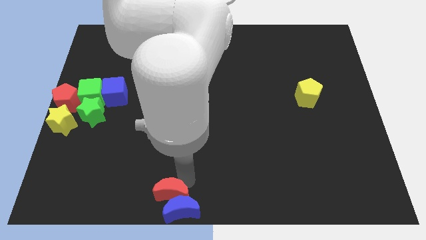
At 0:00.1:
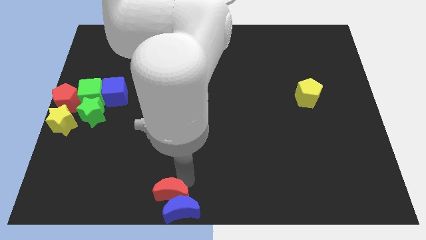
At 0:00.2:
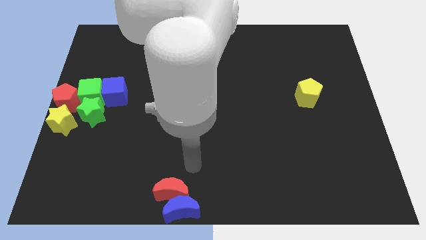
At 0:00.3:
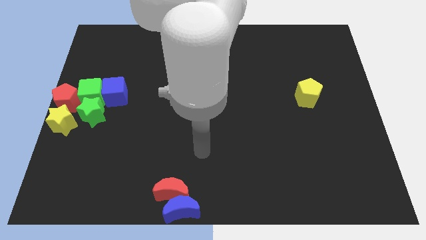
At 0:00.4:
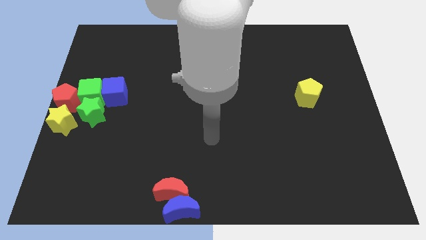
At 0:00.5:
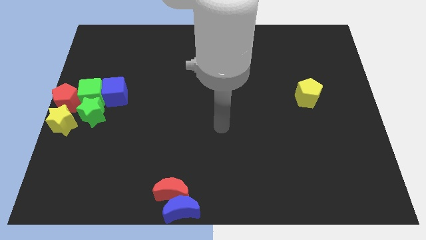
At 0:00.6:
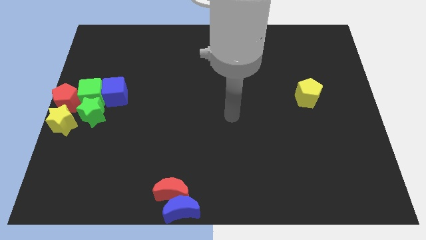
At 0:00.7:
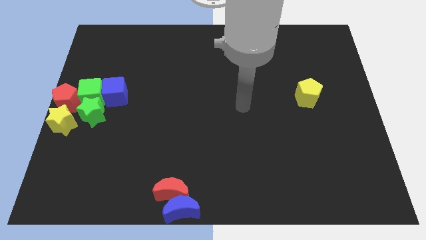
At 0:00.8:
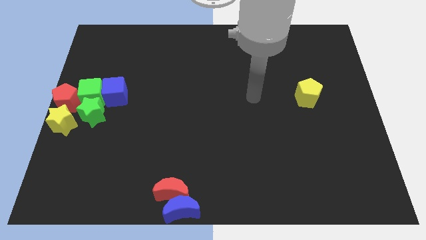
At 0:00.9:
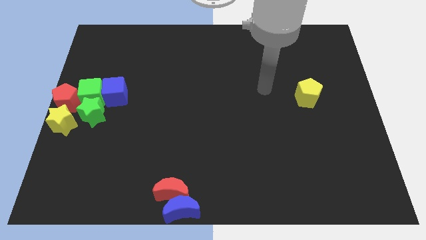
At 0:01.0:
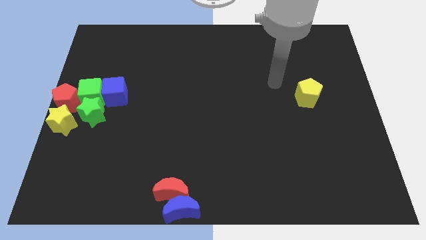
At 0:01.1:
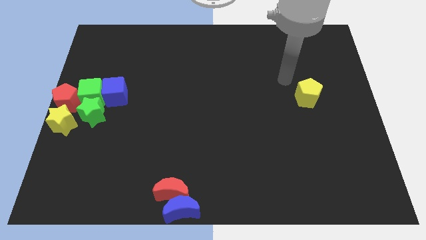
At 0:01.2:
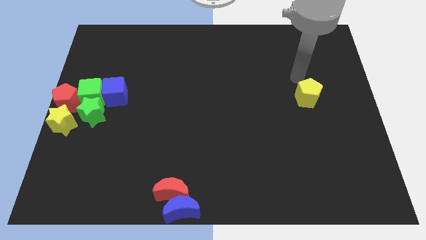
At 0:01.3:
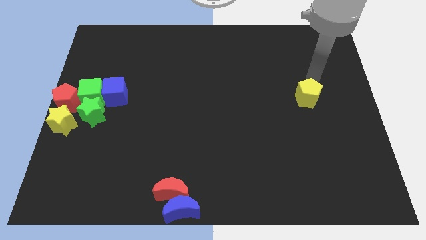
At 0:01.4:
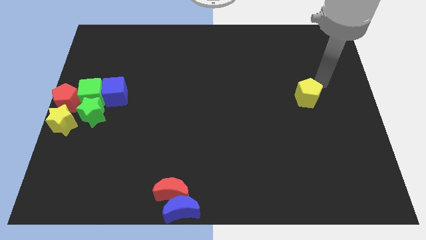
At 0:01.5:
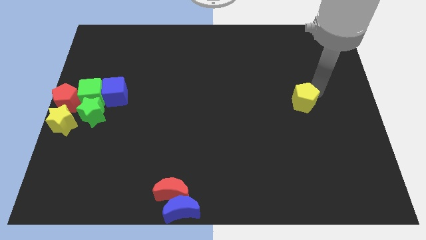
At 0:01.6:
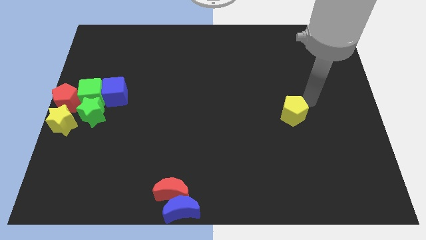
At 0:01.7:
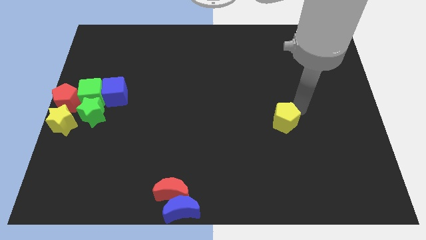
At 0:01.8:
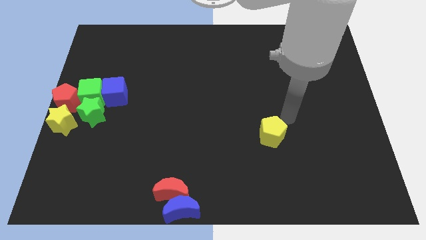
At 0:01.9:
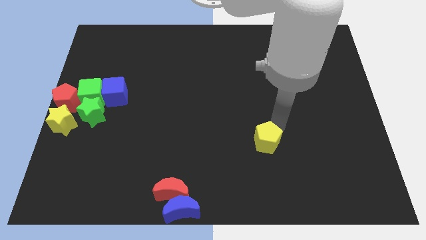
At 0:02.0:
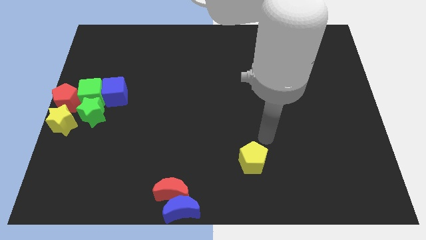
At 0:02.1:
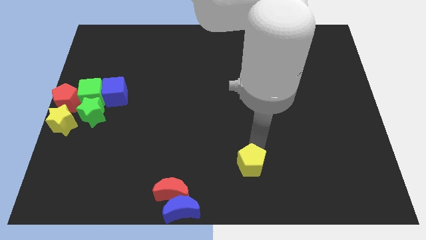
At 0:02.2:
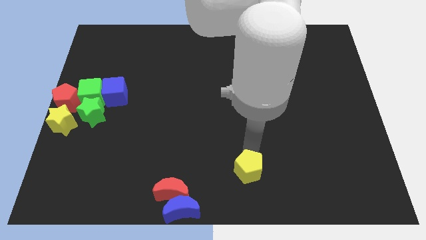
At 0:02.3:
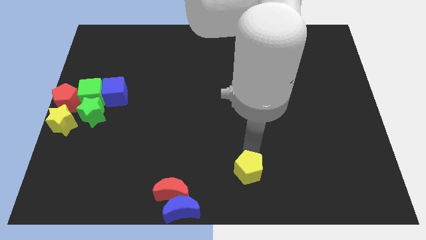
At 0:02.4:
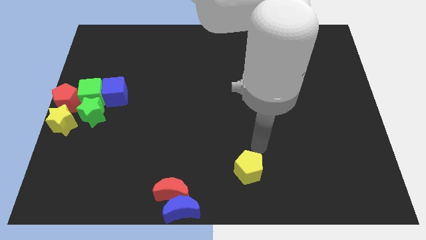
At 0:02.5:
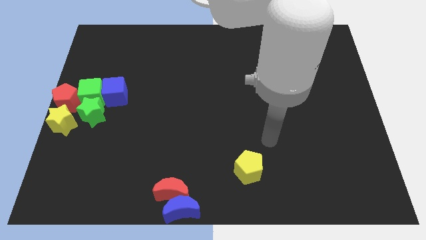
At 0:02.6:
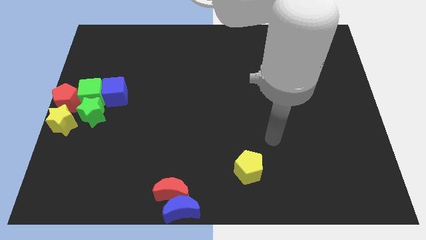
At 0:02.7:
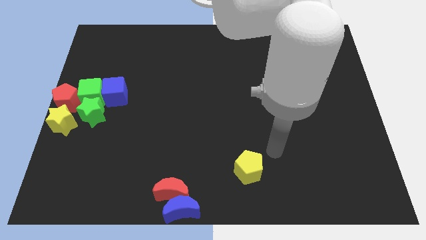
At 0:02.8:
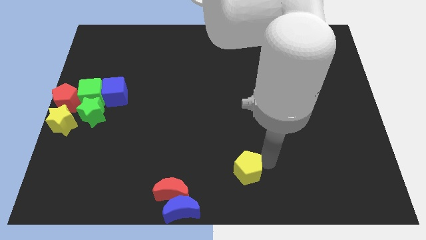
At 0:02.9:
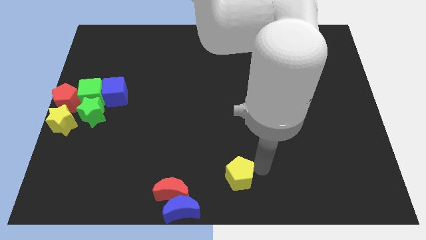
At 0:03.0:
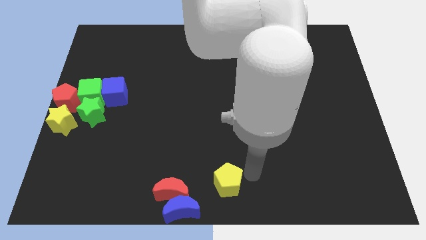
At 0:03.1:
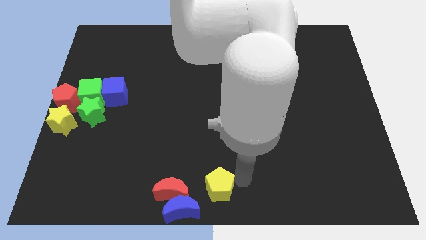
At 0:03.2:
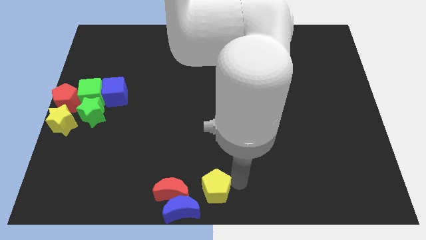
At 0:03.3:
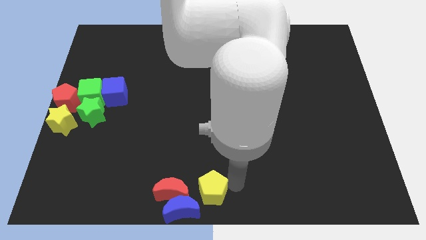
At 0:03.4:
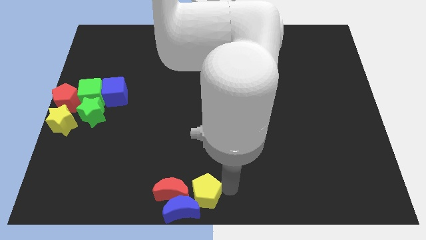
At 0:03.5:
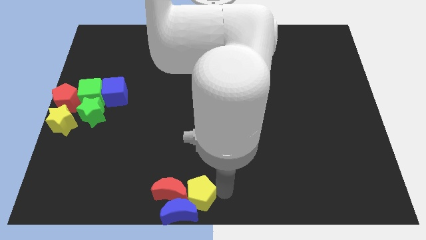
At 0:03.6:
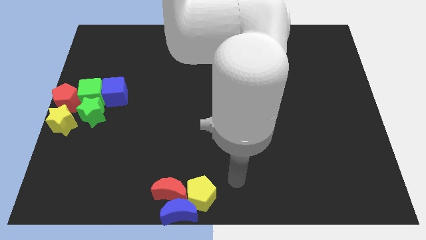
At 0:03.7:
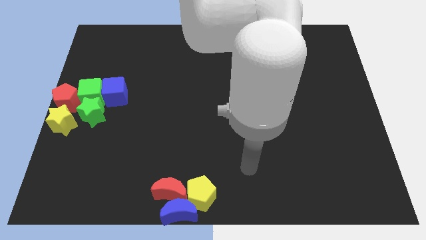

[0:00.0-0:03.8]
place the yellow pentagon into the red moon blue crescent

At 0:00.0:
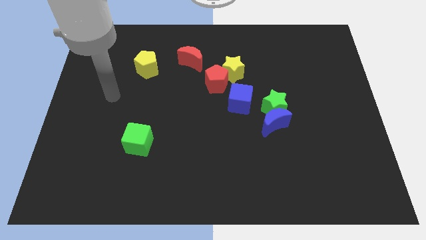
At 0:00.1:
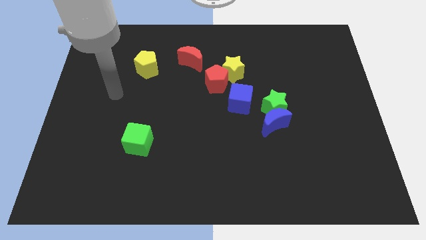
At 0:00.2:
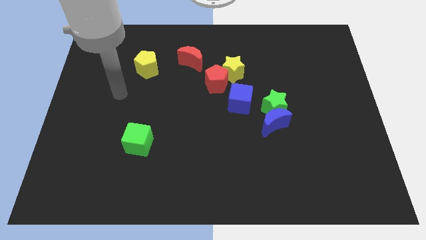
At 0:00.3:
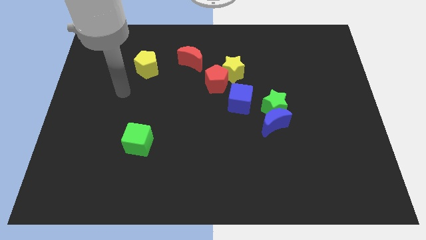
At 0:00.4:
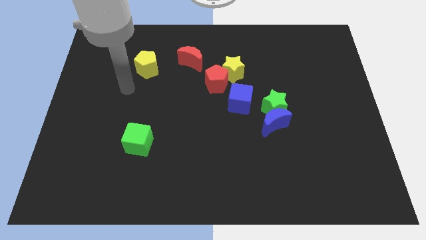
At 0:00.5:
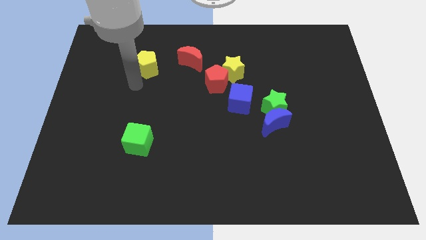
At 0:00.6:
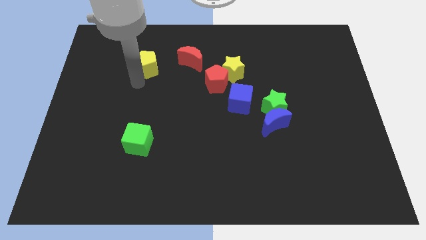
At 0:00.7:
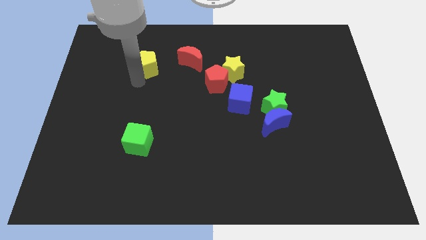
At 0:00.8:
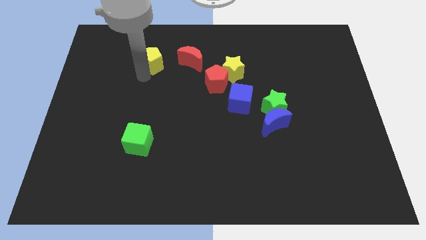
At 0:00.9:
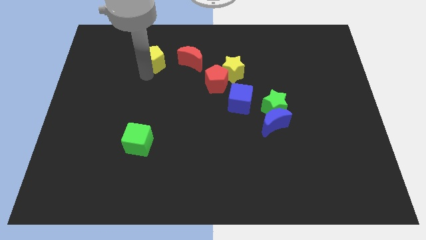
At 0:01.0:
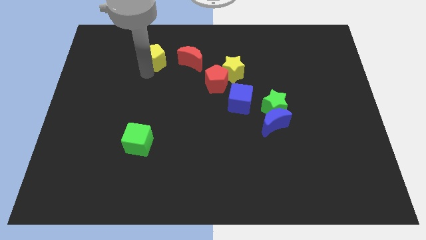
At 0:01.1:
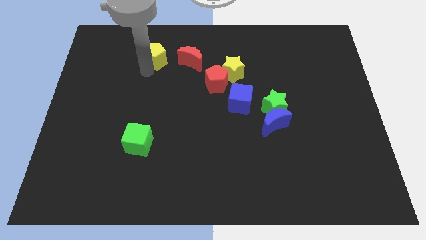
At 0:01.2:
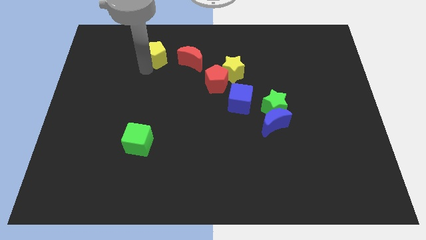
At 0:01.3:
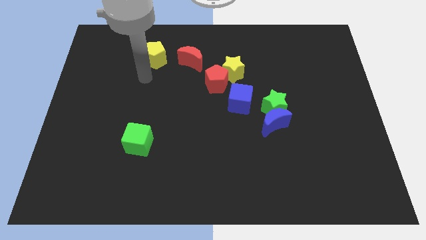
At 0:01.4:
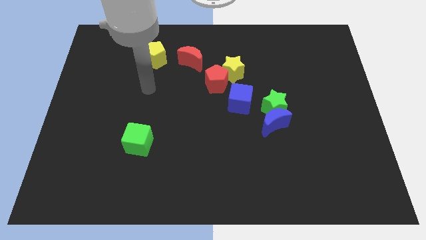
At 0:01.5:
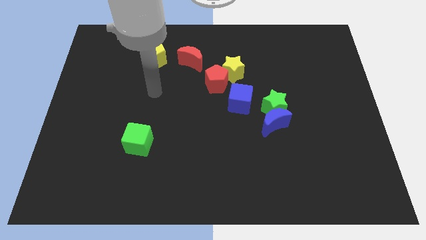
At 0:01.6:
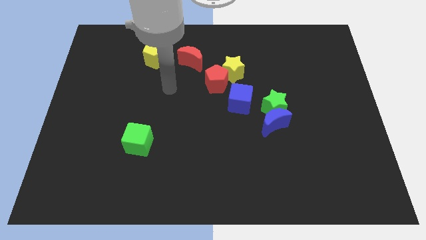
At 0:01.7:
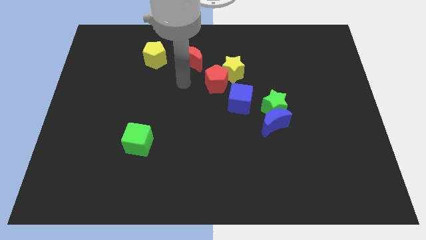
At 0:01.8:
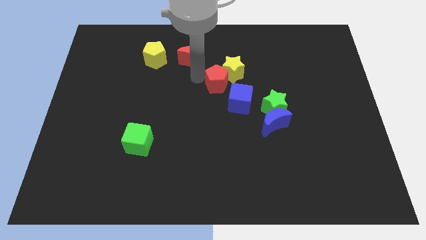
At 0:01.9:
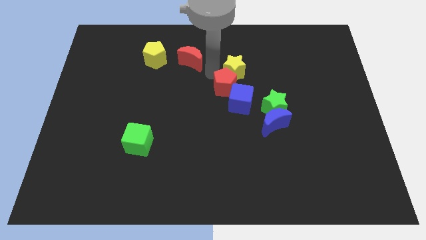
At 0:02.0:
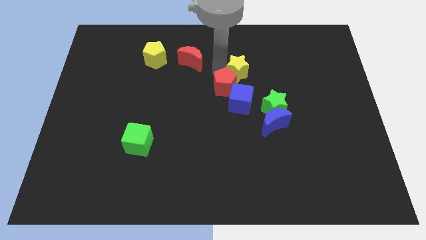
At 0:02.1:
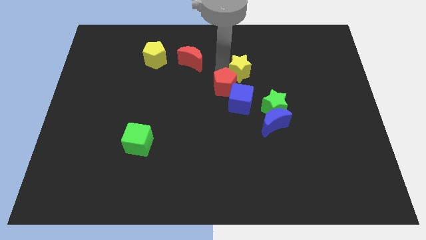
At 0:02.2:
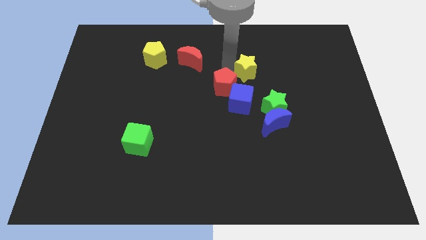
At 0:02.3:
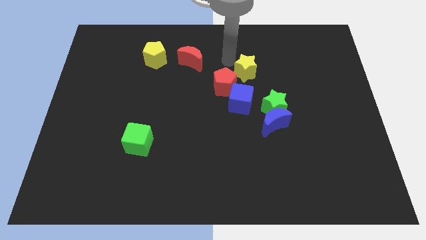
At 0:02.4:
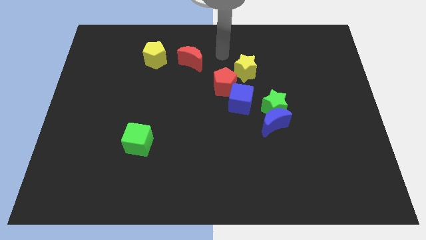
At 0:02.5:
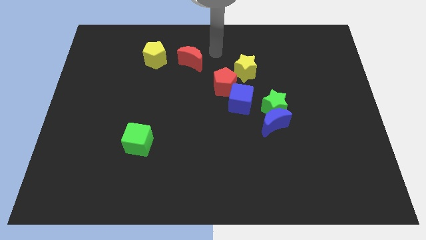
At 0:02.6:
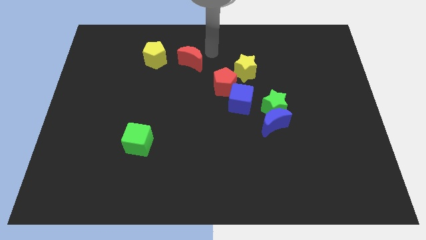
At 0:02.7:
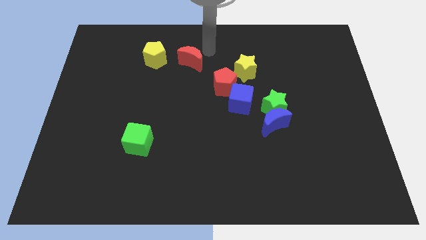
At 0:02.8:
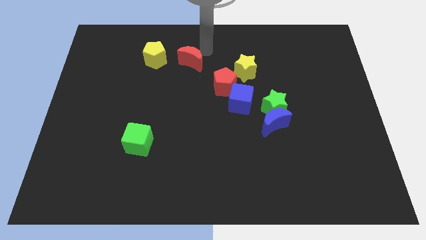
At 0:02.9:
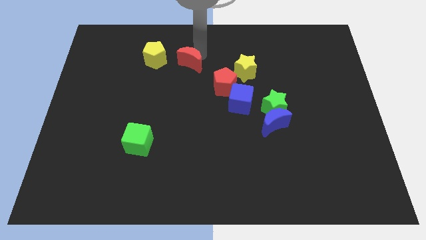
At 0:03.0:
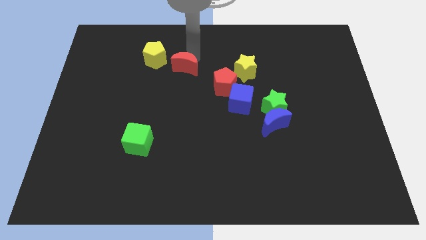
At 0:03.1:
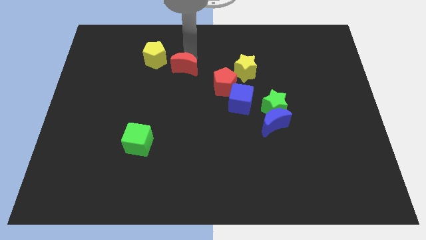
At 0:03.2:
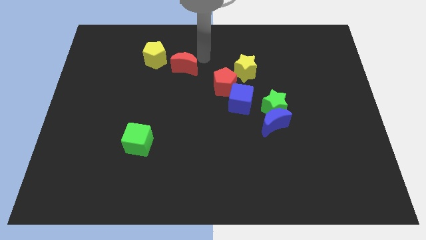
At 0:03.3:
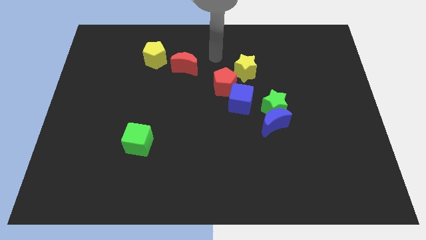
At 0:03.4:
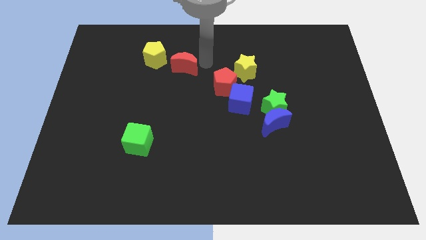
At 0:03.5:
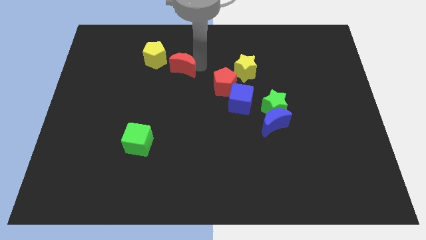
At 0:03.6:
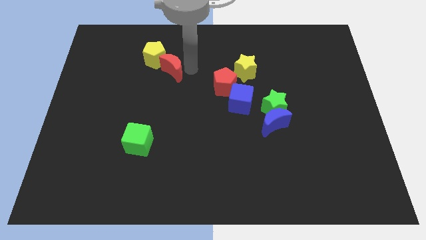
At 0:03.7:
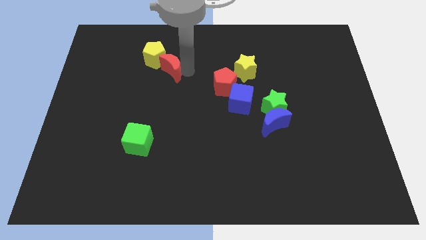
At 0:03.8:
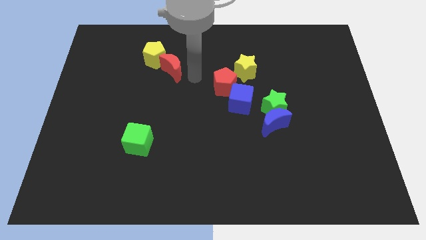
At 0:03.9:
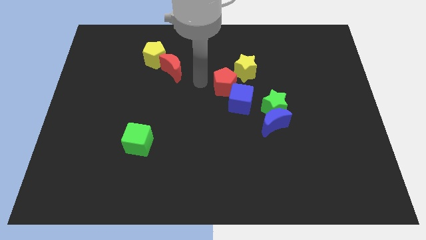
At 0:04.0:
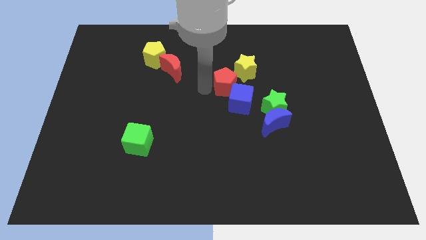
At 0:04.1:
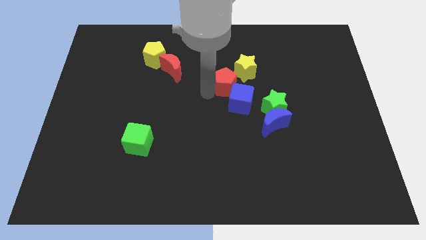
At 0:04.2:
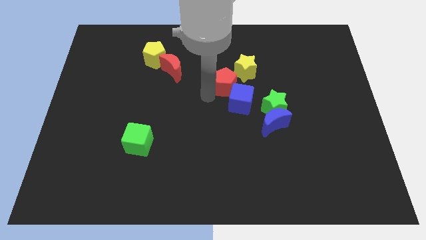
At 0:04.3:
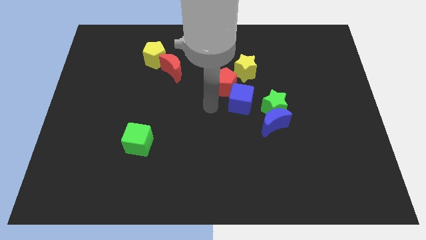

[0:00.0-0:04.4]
move the red crescent to the right side of the yellow pentagon

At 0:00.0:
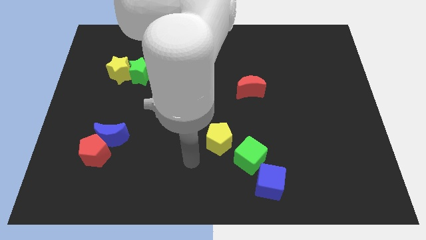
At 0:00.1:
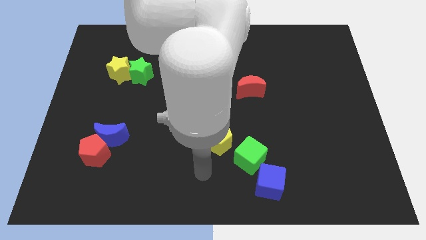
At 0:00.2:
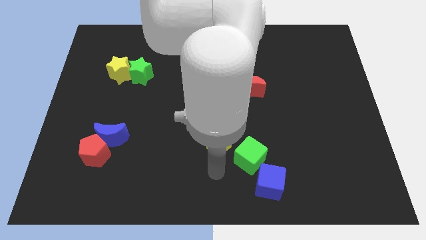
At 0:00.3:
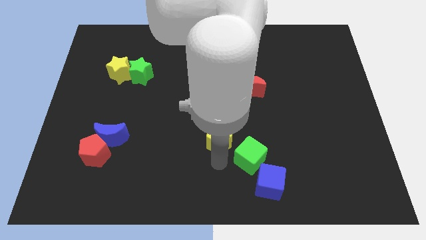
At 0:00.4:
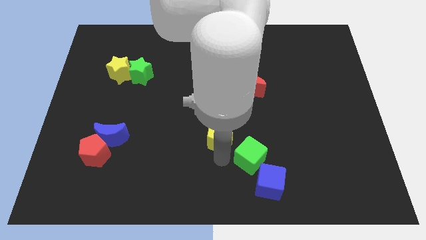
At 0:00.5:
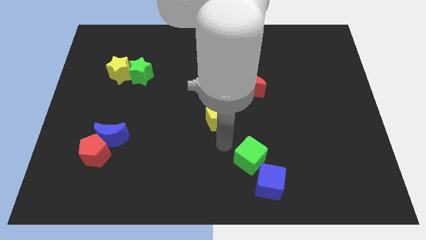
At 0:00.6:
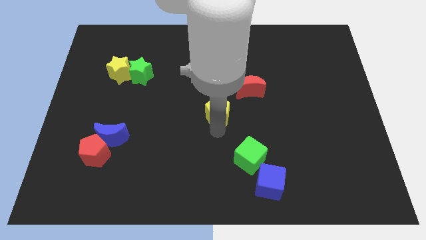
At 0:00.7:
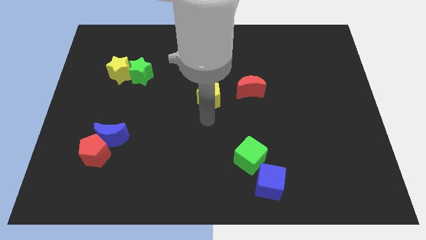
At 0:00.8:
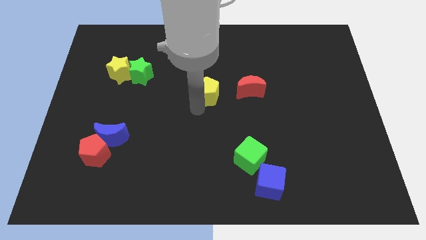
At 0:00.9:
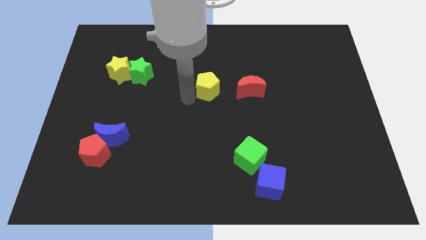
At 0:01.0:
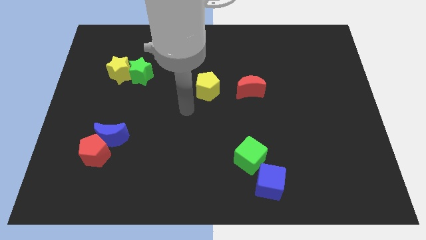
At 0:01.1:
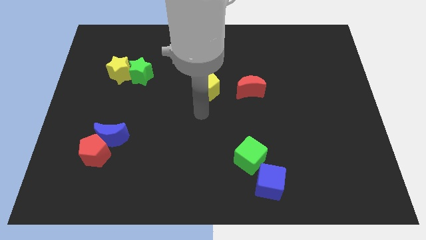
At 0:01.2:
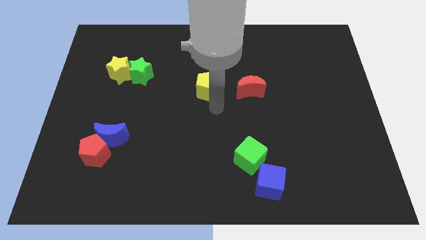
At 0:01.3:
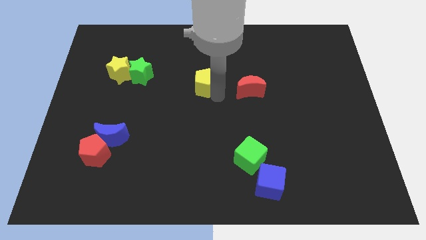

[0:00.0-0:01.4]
move the yellow pentagon left to the red crescent
